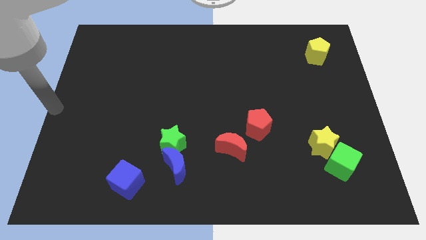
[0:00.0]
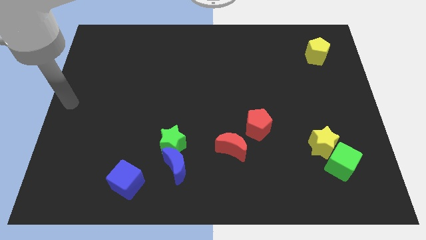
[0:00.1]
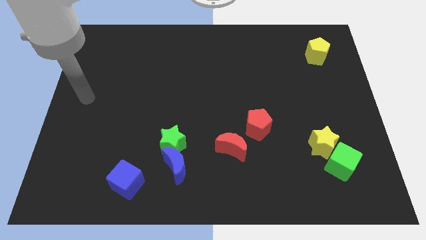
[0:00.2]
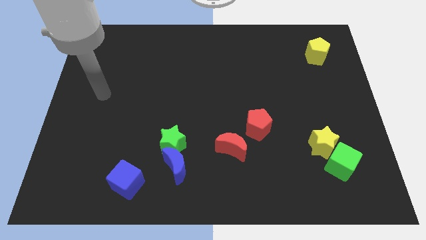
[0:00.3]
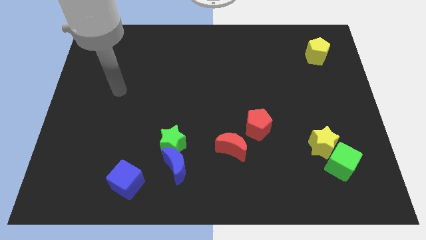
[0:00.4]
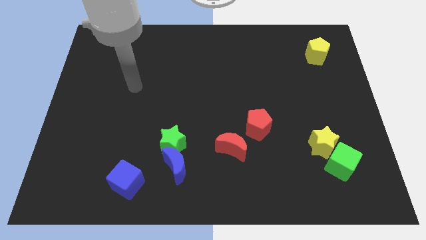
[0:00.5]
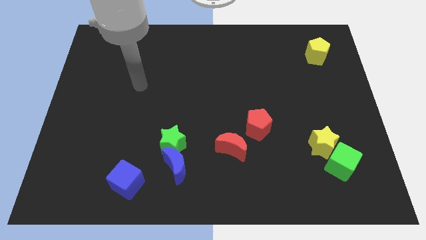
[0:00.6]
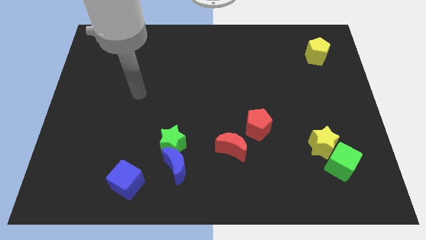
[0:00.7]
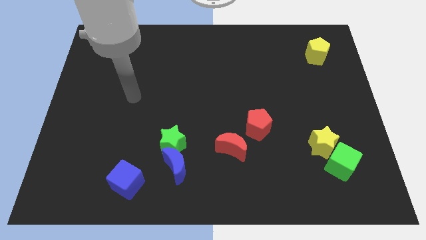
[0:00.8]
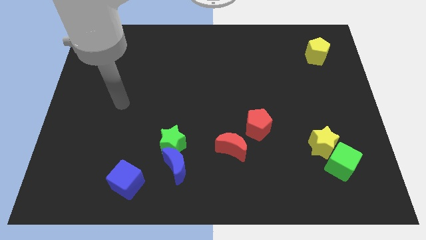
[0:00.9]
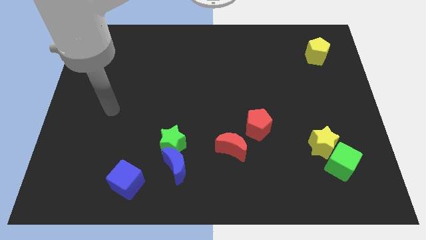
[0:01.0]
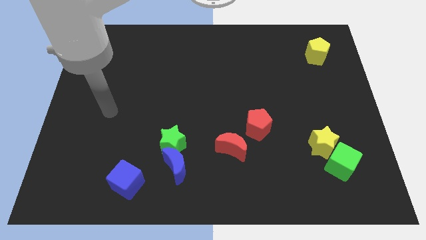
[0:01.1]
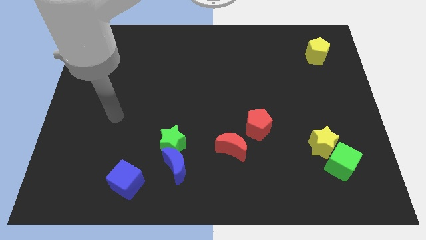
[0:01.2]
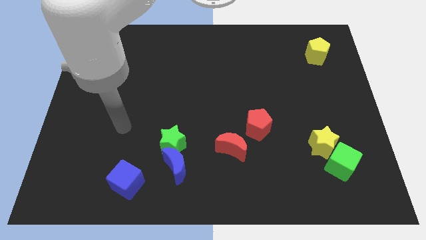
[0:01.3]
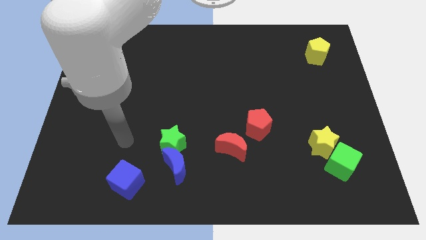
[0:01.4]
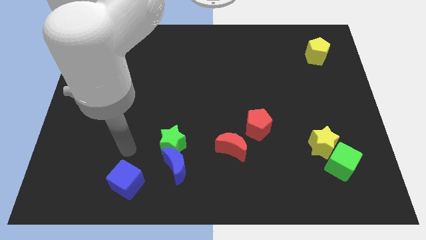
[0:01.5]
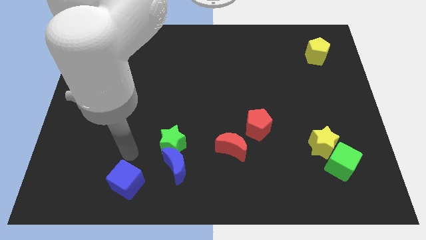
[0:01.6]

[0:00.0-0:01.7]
place your arm vertically above the blue cube

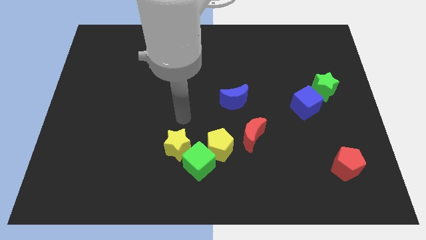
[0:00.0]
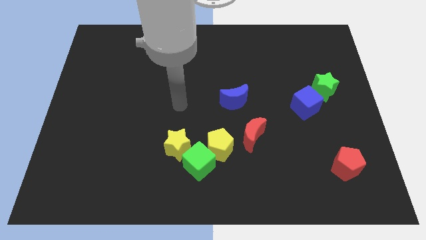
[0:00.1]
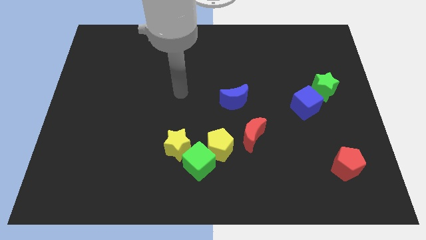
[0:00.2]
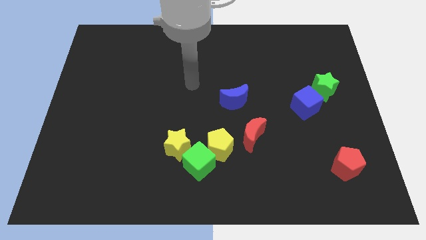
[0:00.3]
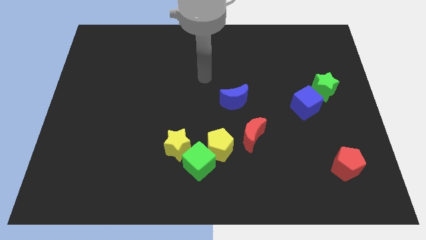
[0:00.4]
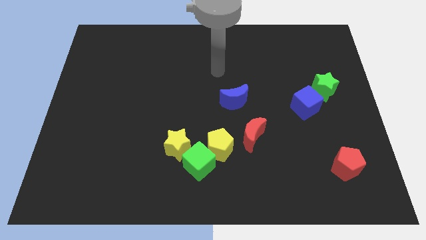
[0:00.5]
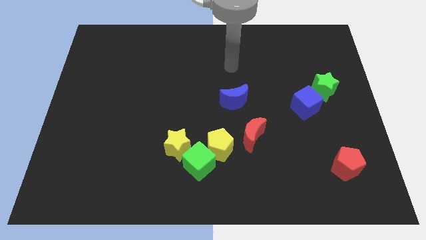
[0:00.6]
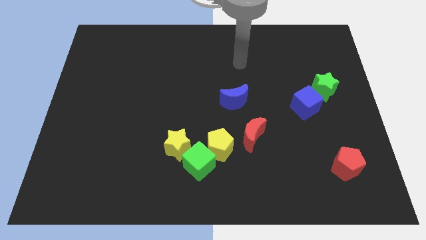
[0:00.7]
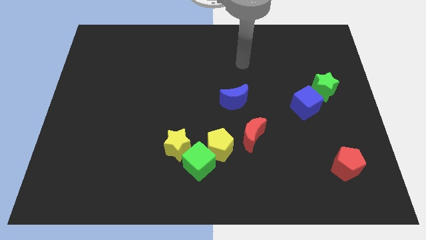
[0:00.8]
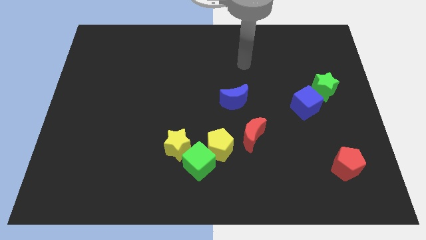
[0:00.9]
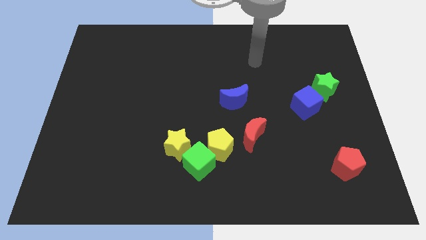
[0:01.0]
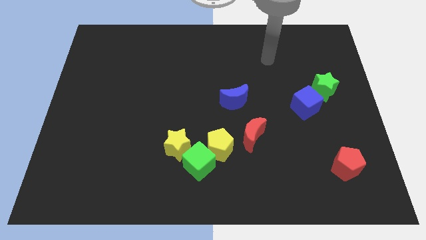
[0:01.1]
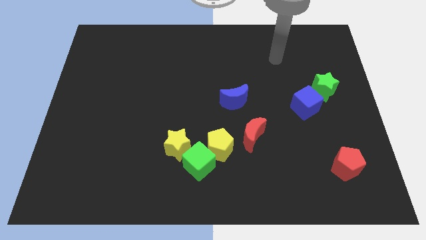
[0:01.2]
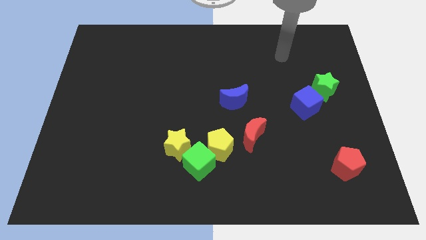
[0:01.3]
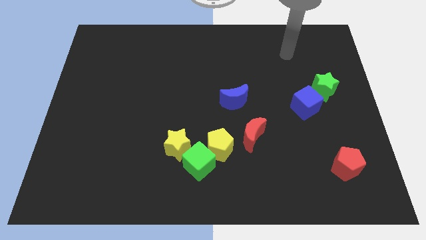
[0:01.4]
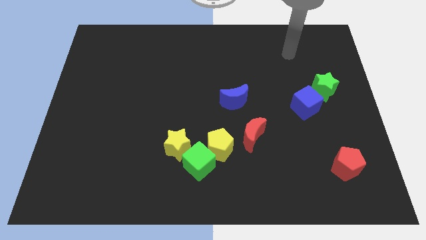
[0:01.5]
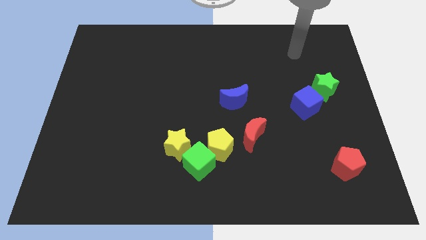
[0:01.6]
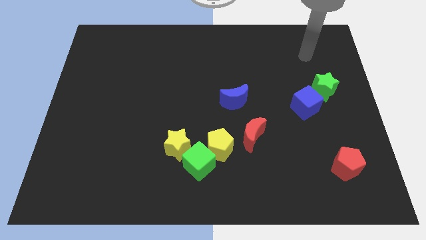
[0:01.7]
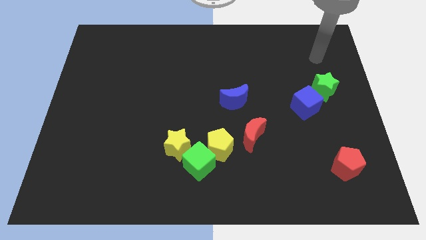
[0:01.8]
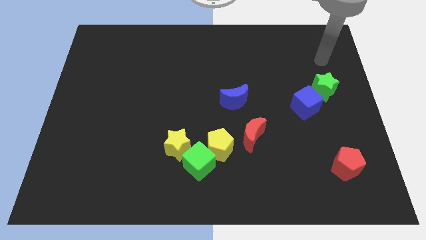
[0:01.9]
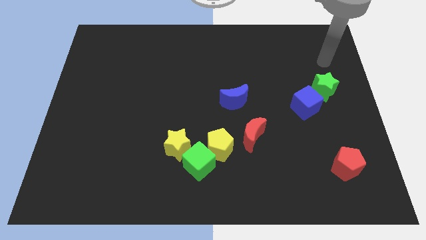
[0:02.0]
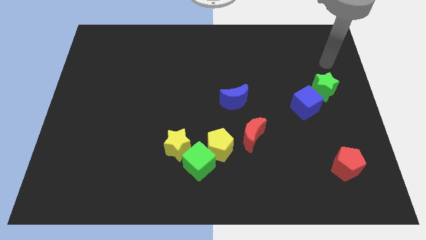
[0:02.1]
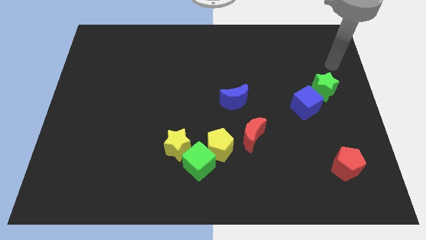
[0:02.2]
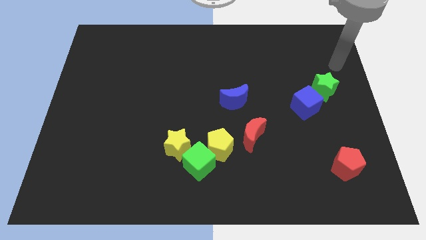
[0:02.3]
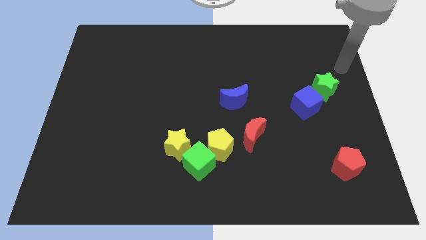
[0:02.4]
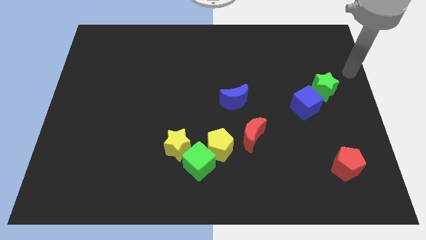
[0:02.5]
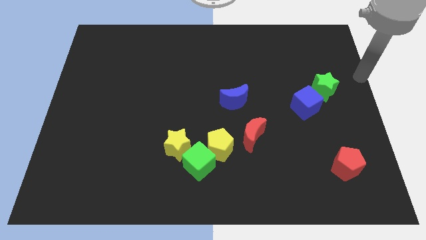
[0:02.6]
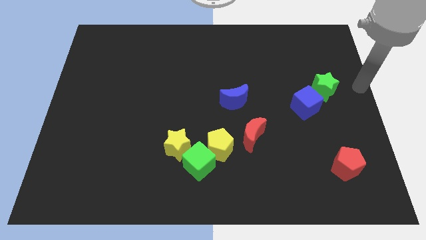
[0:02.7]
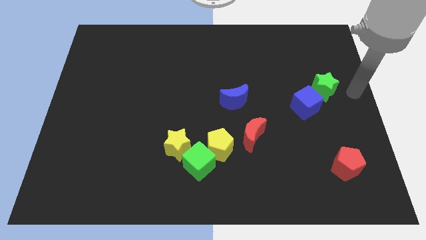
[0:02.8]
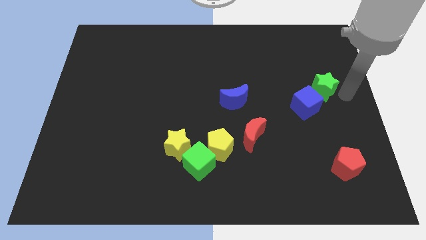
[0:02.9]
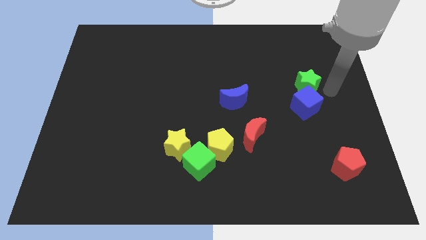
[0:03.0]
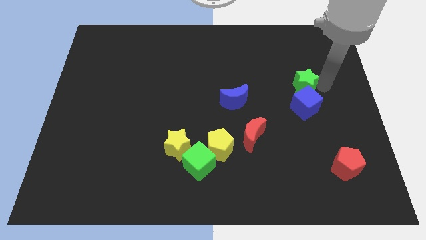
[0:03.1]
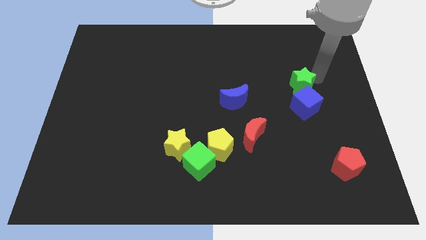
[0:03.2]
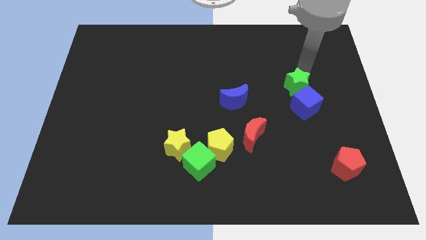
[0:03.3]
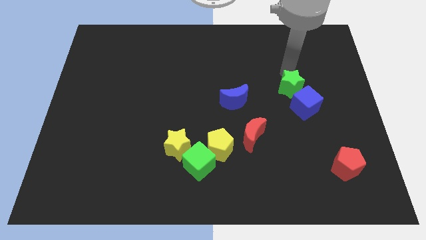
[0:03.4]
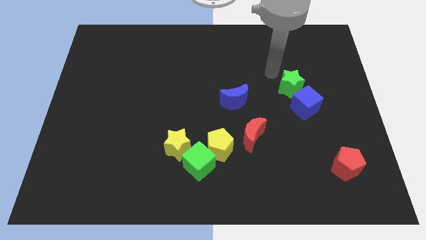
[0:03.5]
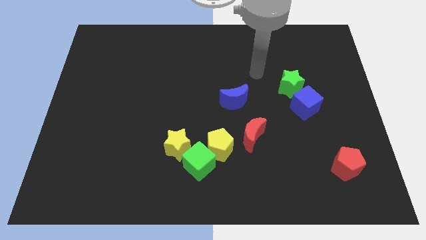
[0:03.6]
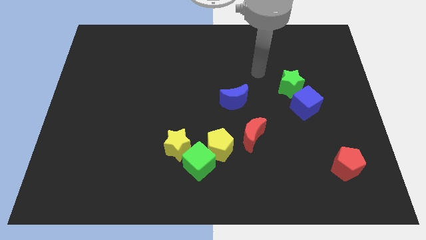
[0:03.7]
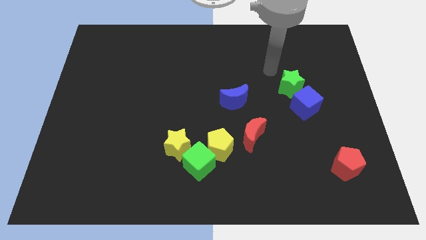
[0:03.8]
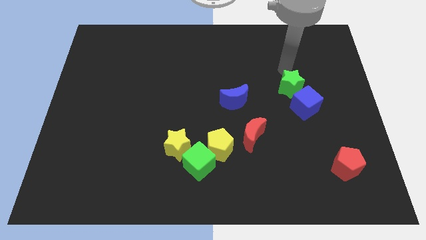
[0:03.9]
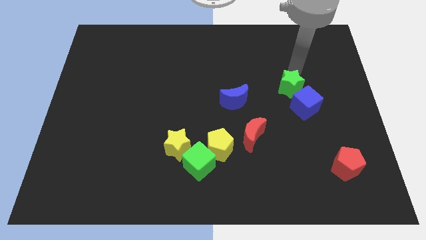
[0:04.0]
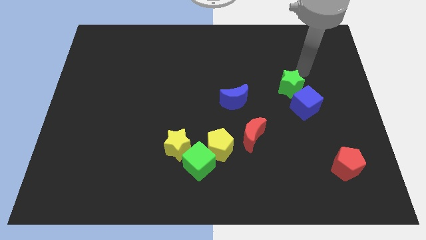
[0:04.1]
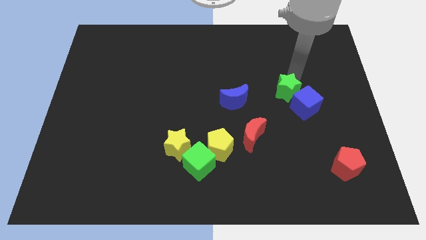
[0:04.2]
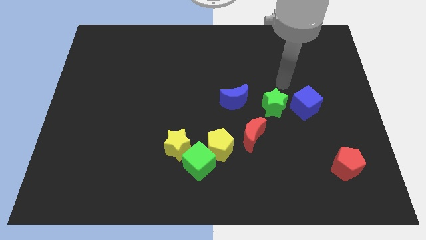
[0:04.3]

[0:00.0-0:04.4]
move the green star to the top of the blue cube

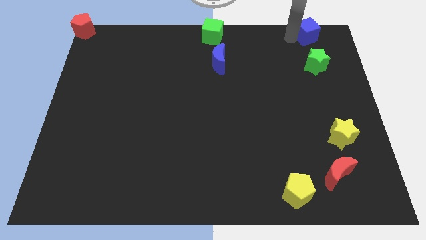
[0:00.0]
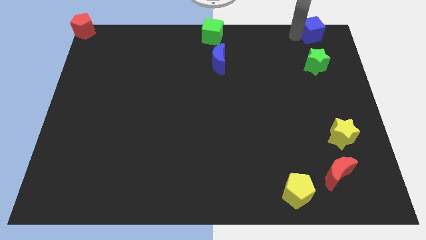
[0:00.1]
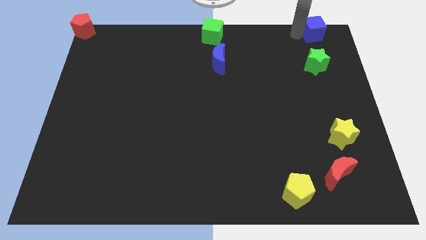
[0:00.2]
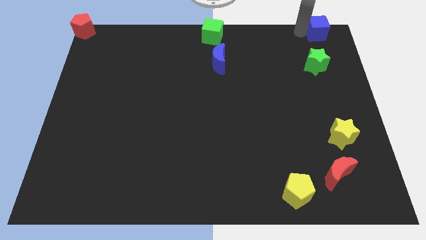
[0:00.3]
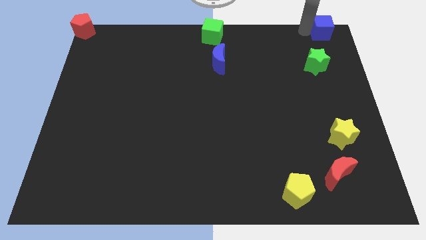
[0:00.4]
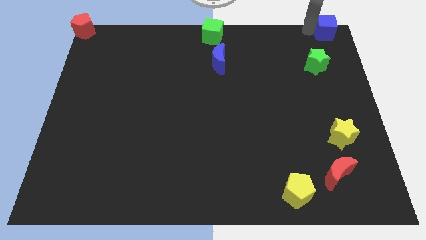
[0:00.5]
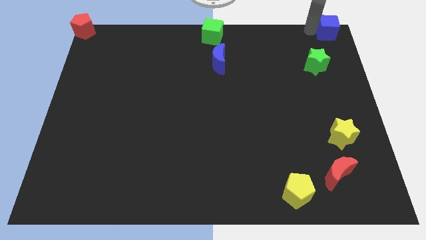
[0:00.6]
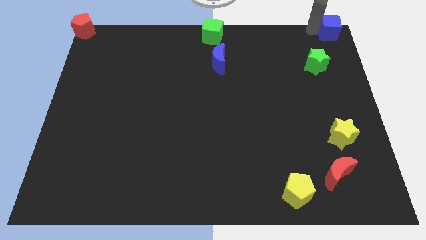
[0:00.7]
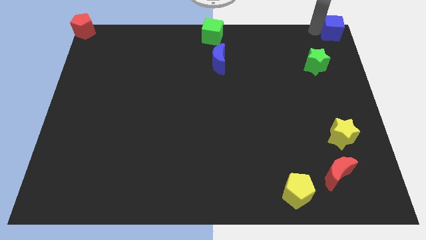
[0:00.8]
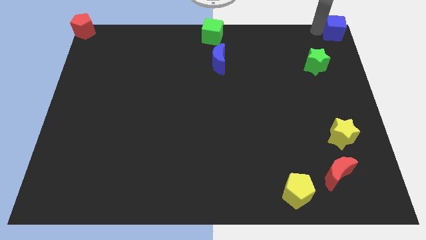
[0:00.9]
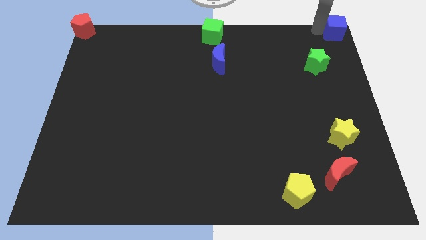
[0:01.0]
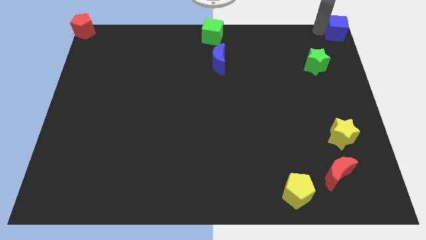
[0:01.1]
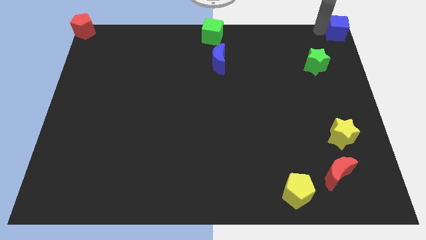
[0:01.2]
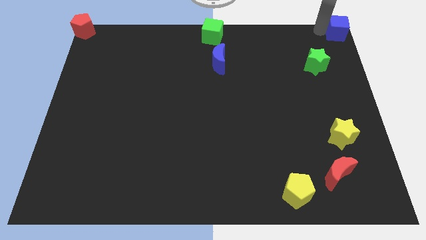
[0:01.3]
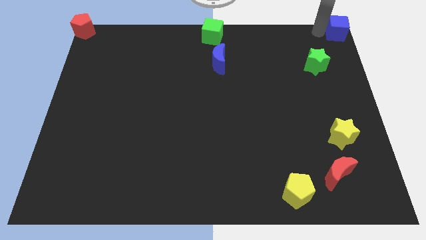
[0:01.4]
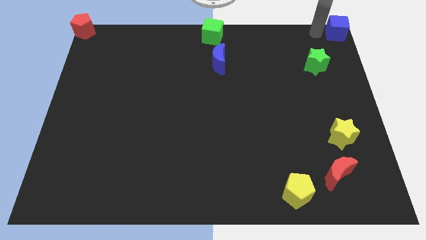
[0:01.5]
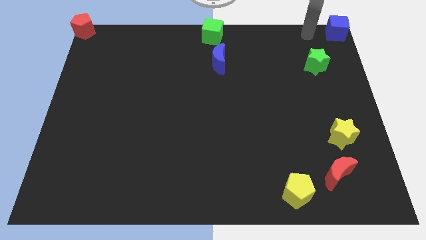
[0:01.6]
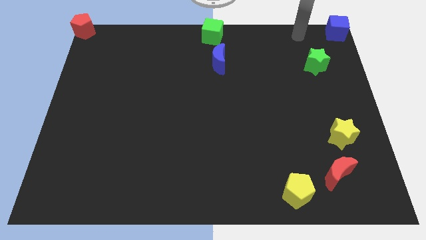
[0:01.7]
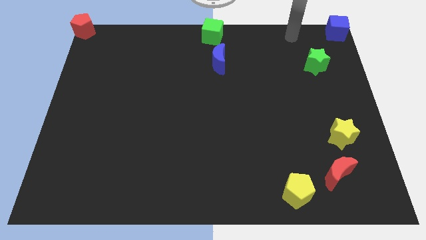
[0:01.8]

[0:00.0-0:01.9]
push the blue cube towards the top right corner of the board

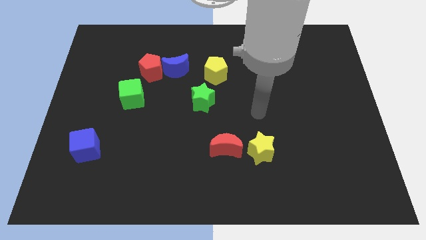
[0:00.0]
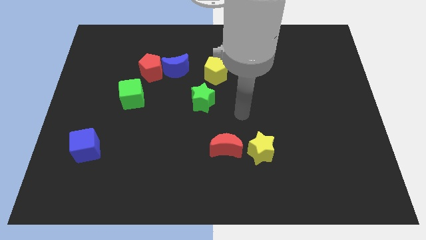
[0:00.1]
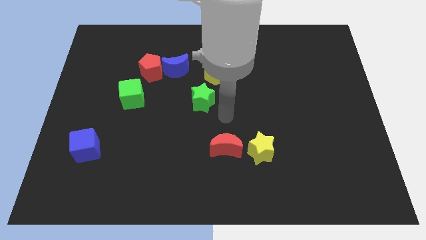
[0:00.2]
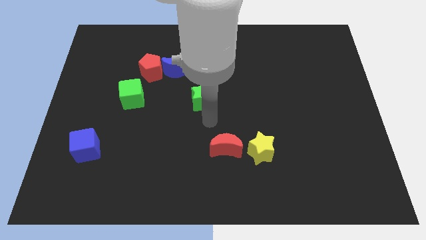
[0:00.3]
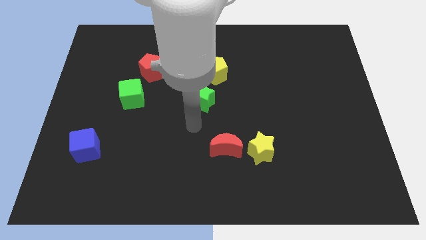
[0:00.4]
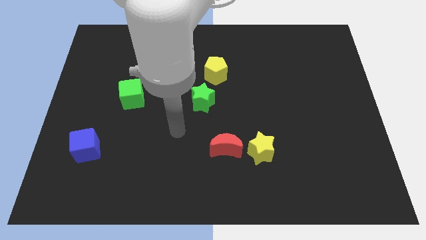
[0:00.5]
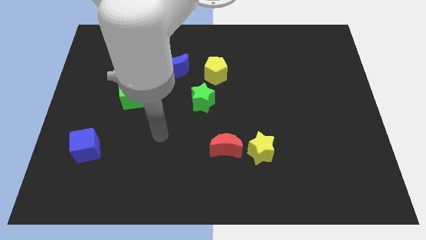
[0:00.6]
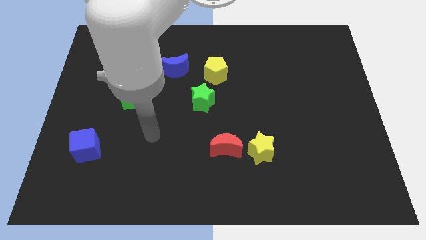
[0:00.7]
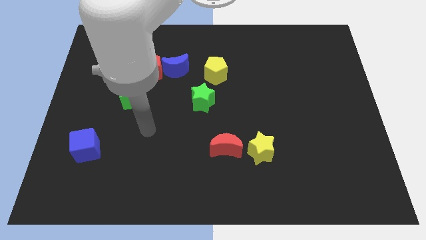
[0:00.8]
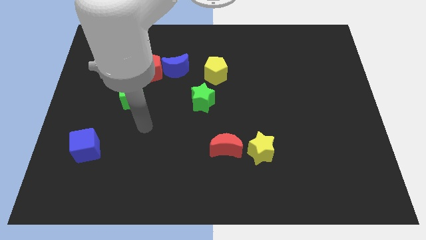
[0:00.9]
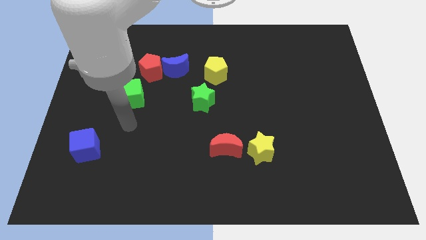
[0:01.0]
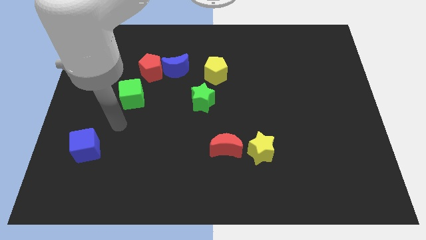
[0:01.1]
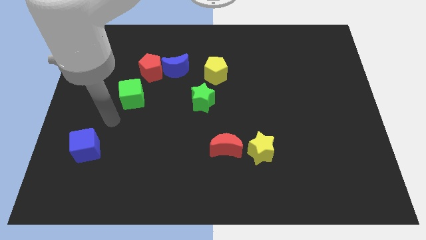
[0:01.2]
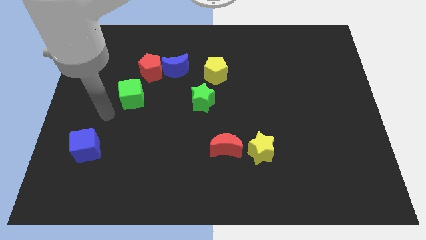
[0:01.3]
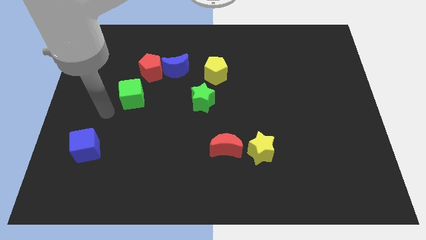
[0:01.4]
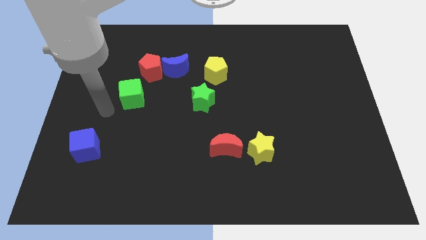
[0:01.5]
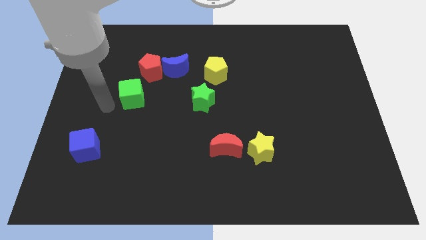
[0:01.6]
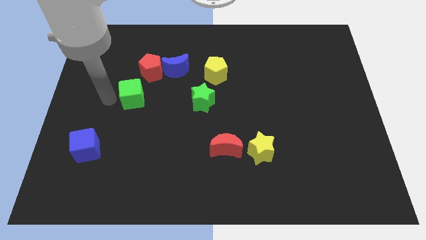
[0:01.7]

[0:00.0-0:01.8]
point your arm at the left side of the green cube
